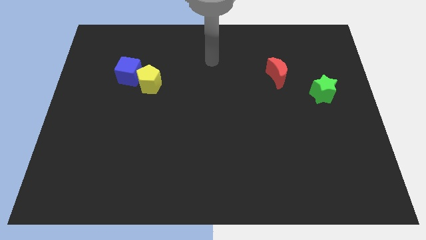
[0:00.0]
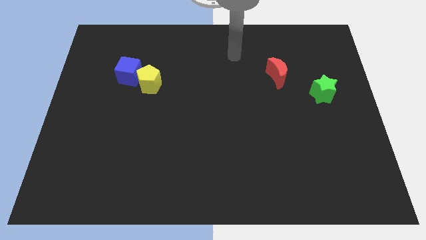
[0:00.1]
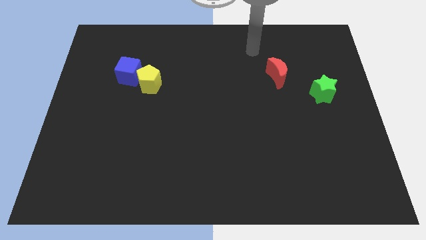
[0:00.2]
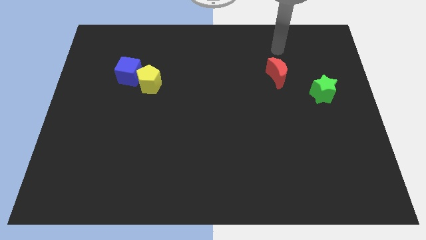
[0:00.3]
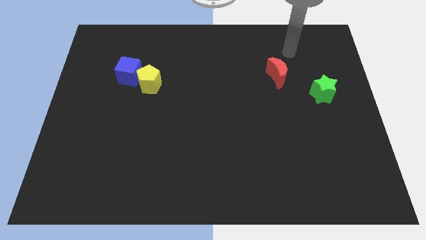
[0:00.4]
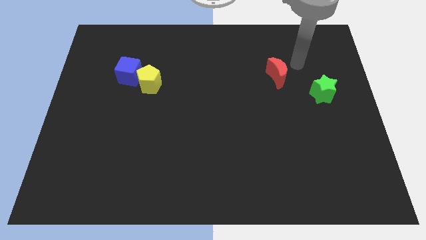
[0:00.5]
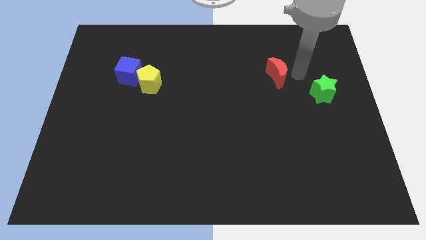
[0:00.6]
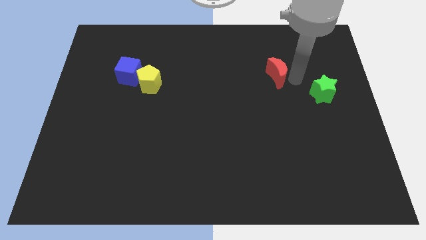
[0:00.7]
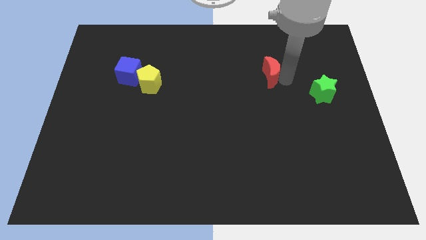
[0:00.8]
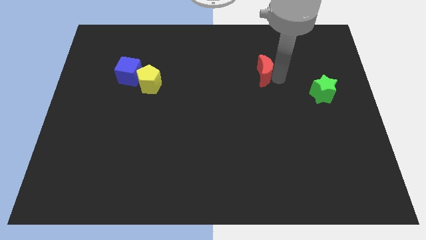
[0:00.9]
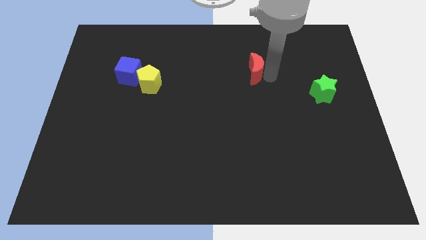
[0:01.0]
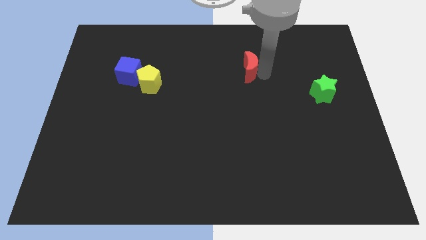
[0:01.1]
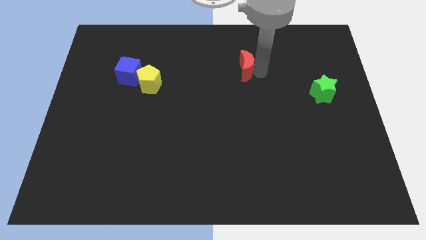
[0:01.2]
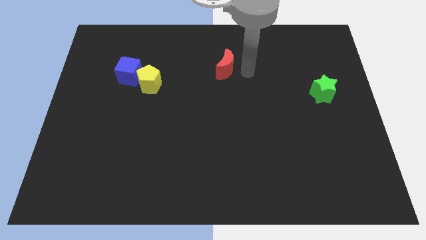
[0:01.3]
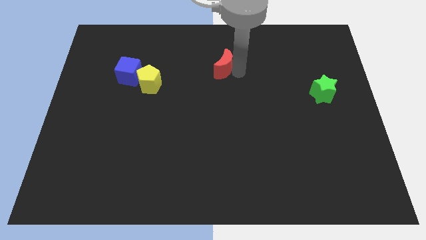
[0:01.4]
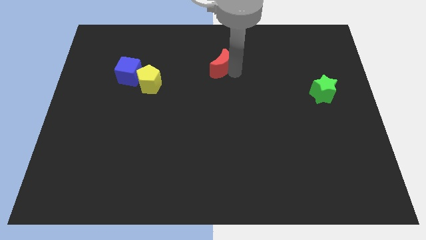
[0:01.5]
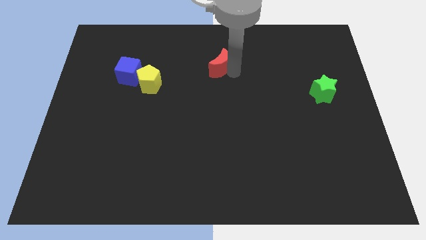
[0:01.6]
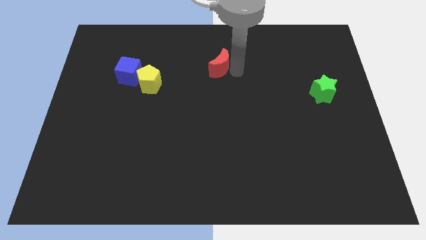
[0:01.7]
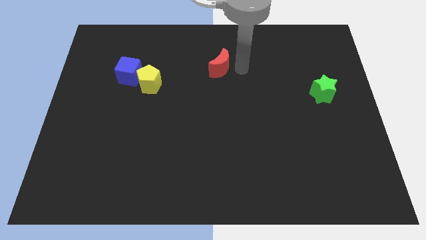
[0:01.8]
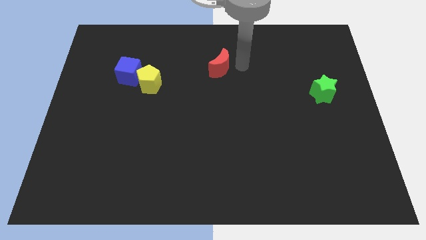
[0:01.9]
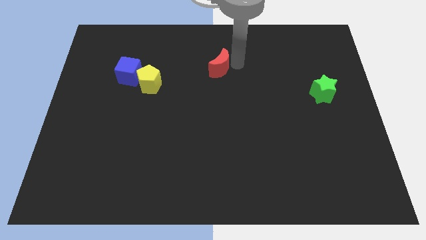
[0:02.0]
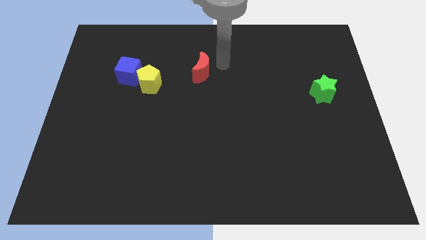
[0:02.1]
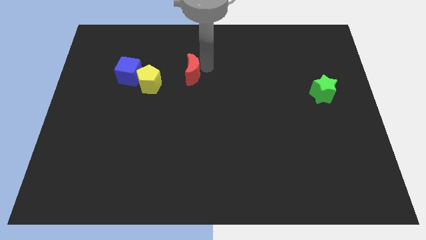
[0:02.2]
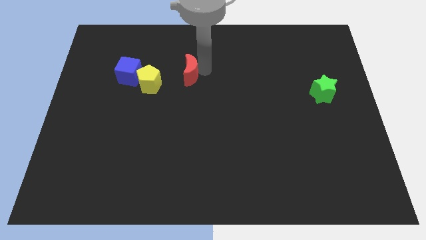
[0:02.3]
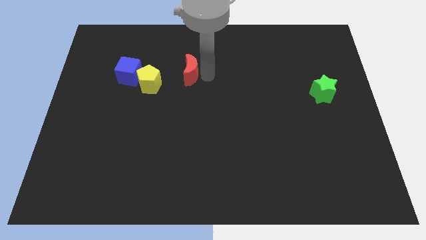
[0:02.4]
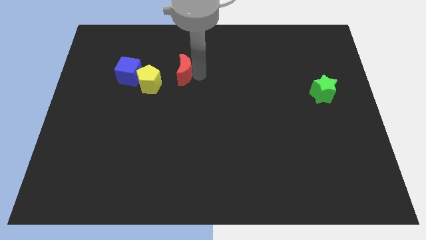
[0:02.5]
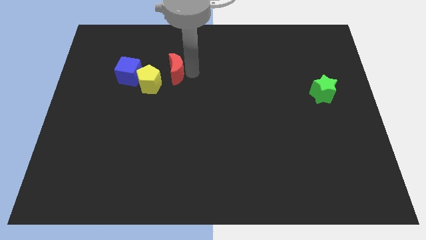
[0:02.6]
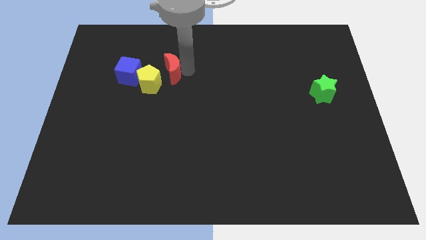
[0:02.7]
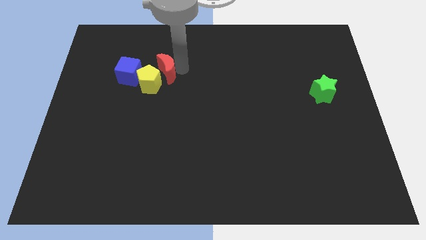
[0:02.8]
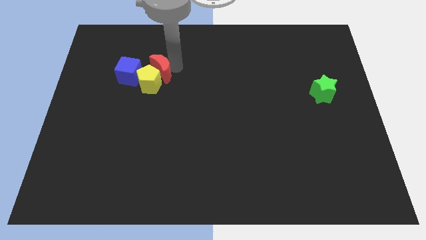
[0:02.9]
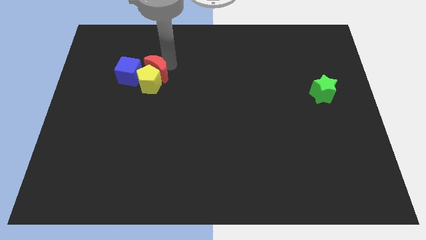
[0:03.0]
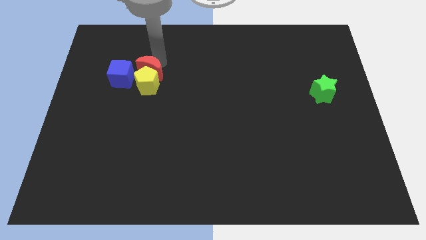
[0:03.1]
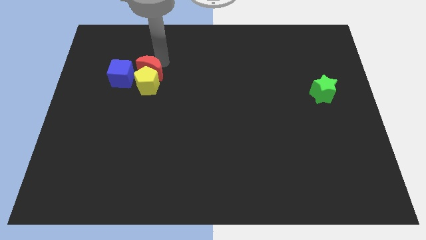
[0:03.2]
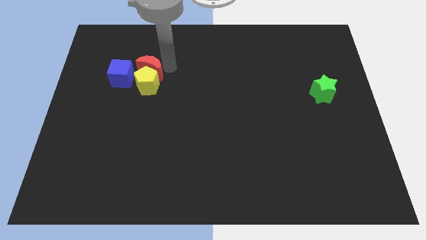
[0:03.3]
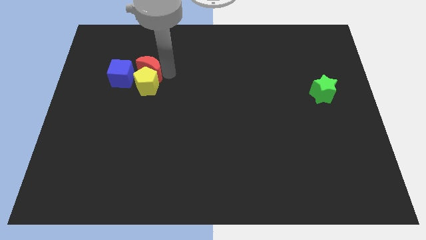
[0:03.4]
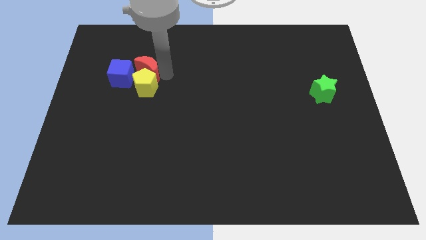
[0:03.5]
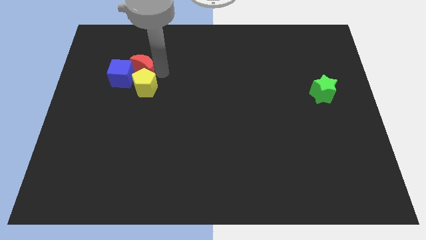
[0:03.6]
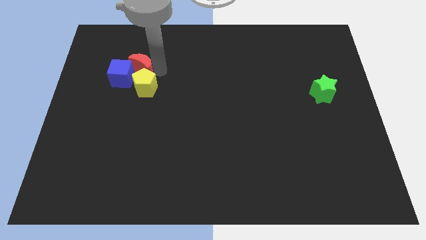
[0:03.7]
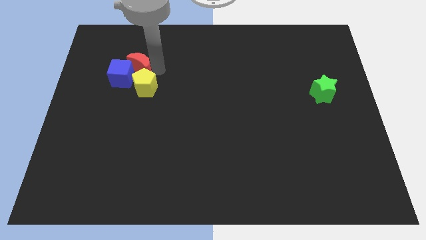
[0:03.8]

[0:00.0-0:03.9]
push the moon to the cube

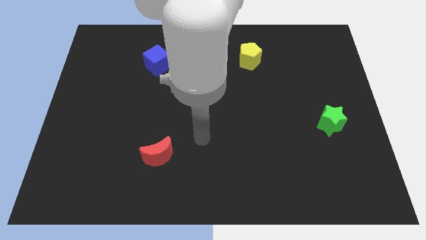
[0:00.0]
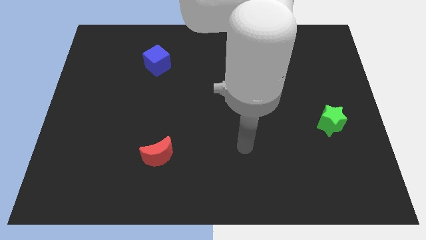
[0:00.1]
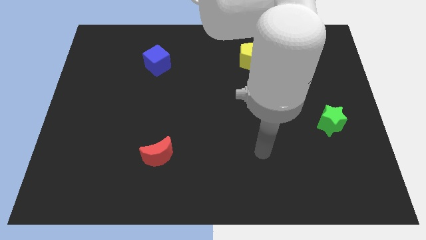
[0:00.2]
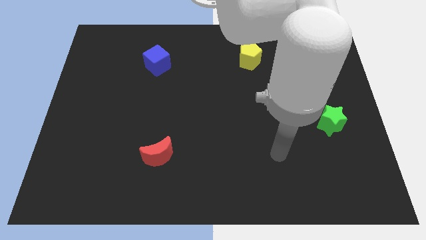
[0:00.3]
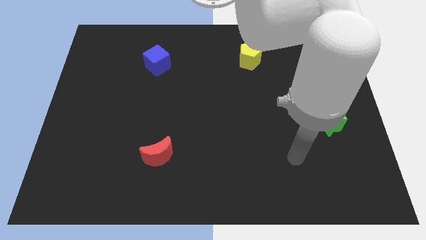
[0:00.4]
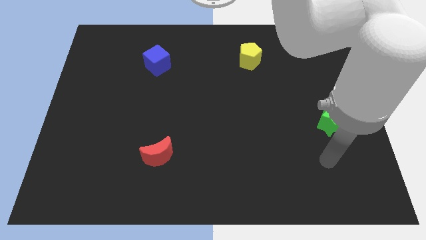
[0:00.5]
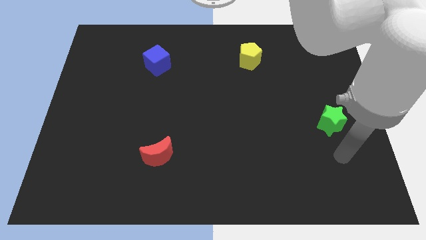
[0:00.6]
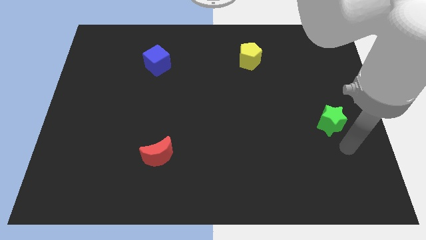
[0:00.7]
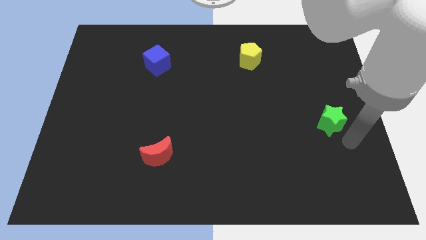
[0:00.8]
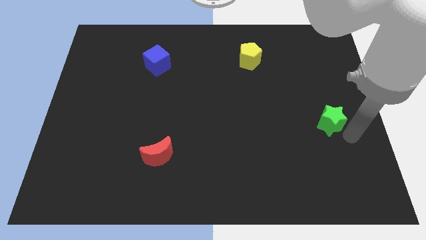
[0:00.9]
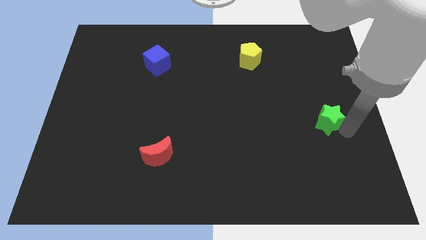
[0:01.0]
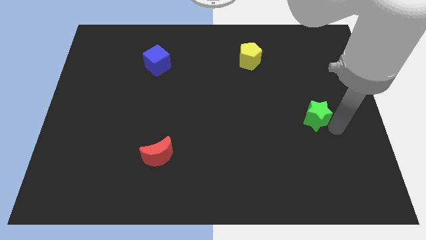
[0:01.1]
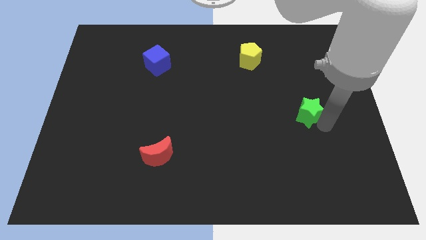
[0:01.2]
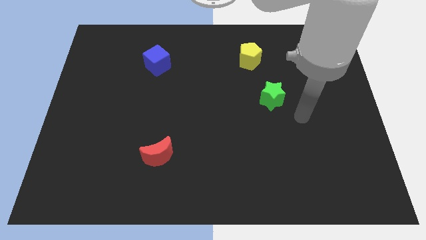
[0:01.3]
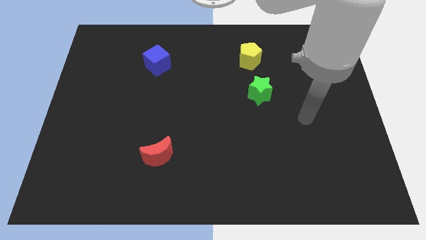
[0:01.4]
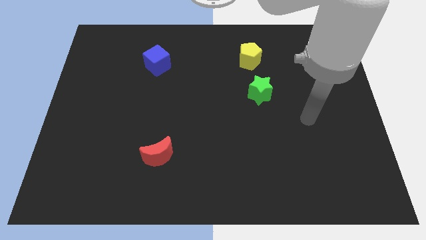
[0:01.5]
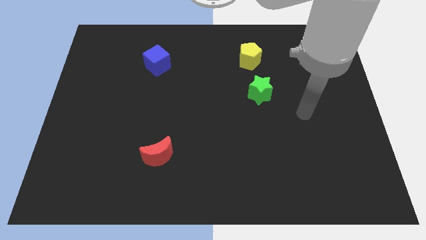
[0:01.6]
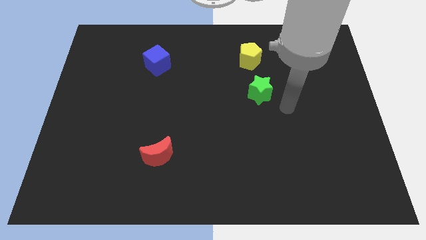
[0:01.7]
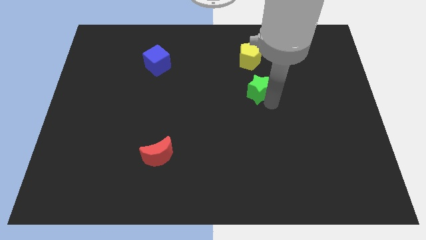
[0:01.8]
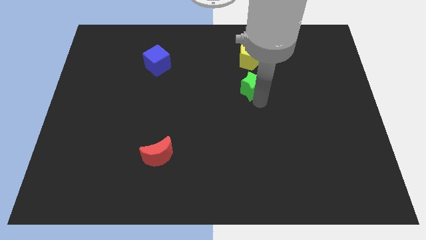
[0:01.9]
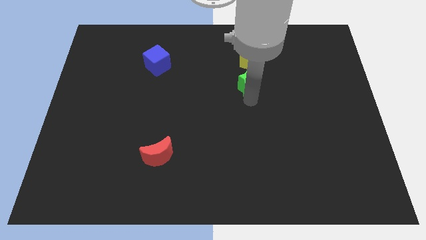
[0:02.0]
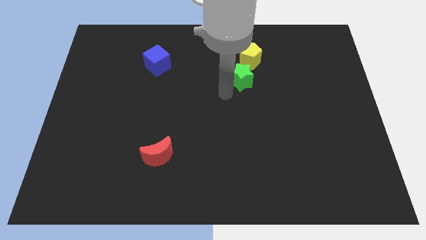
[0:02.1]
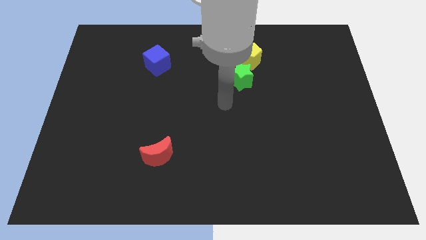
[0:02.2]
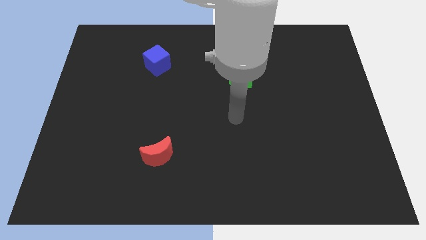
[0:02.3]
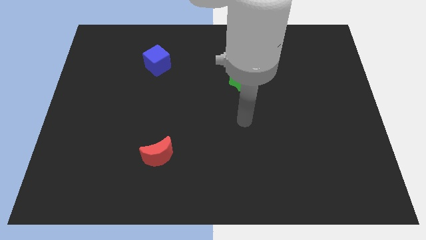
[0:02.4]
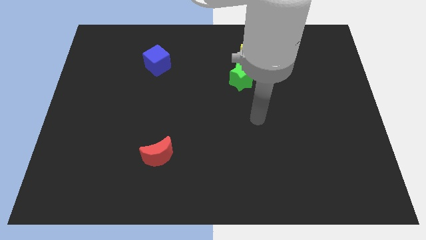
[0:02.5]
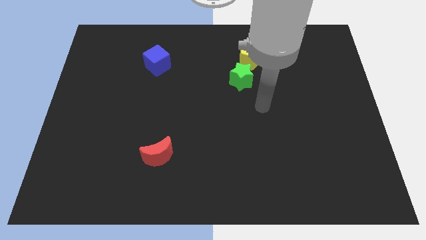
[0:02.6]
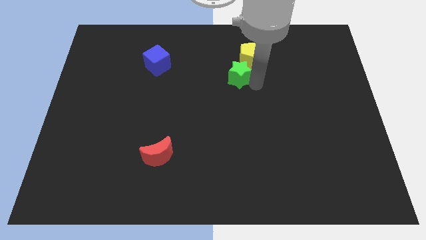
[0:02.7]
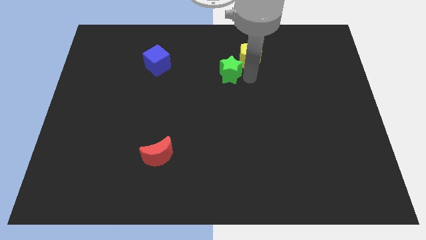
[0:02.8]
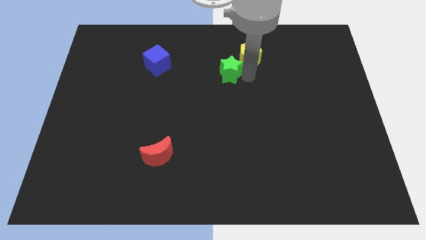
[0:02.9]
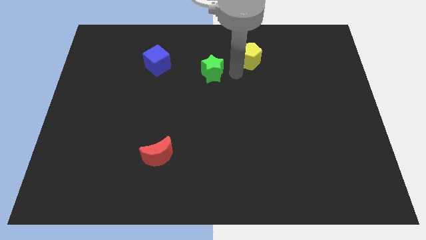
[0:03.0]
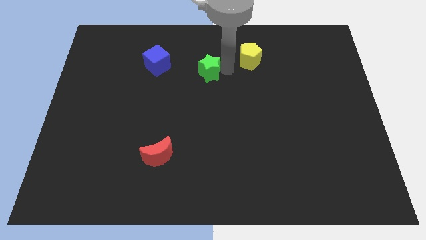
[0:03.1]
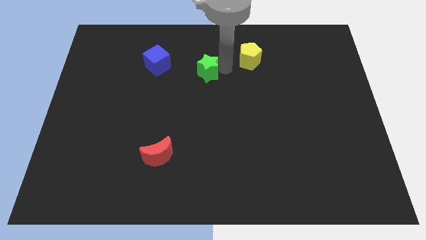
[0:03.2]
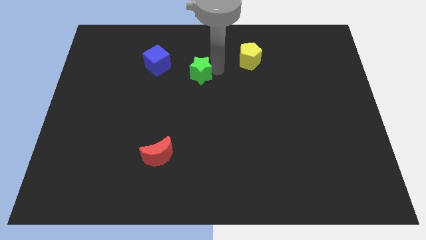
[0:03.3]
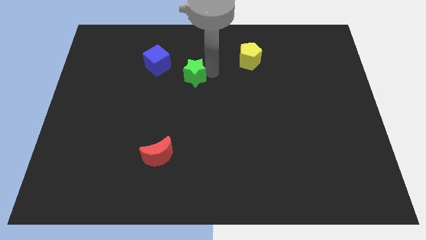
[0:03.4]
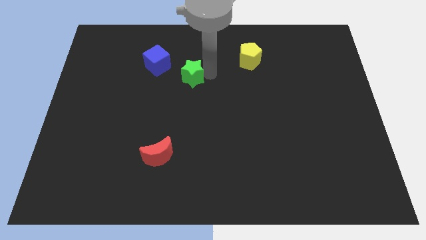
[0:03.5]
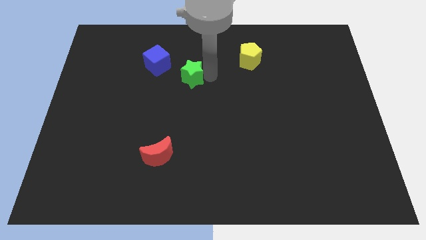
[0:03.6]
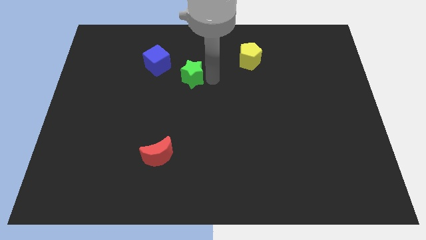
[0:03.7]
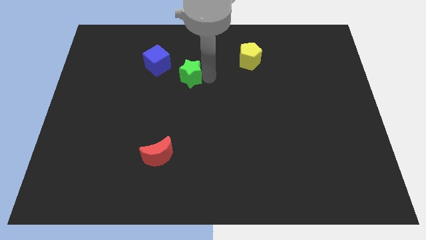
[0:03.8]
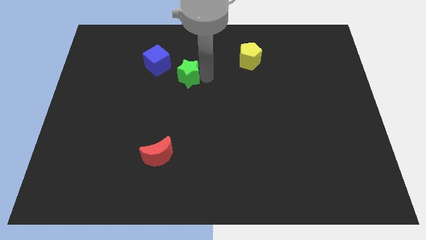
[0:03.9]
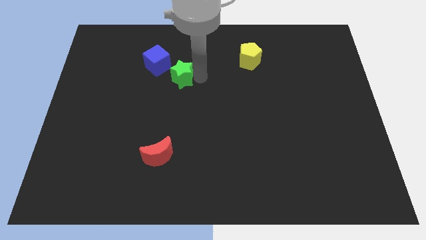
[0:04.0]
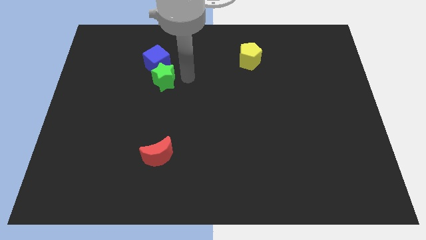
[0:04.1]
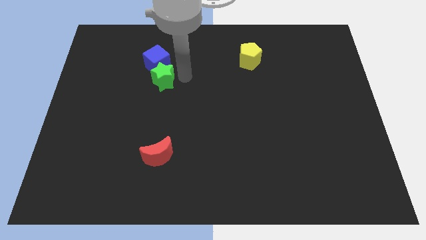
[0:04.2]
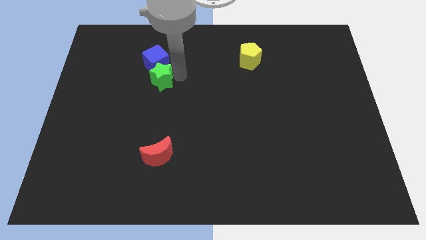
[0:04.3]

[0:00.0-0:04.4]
push the green star next to the blue block

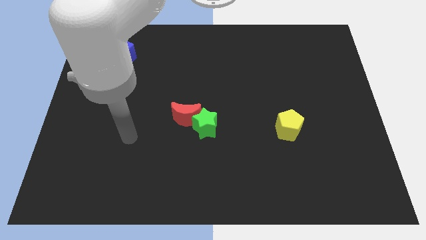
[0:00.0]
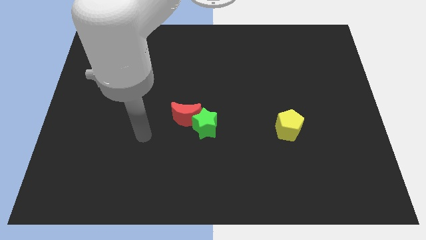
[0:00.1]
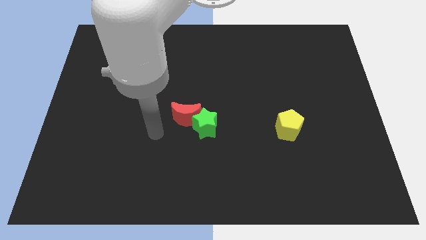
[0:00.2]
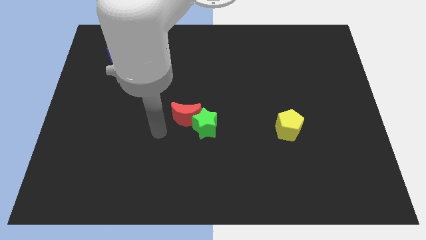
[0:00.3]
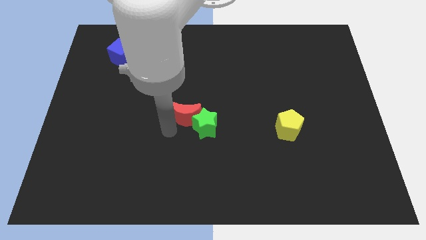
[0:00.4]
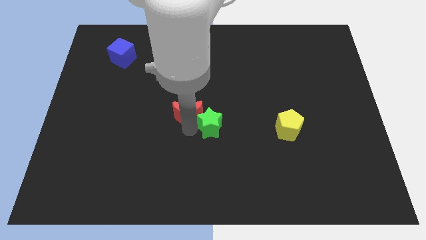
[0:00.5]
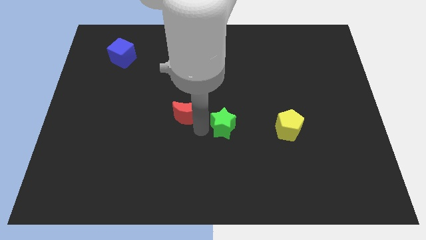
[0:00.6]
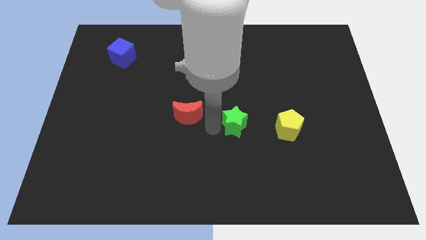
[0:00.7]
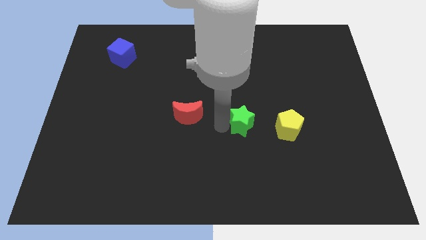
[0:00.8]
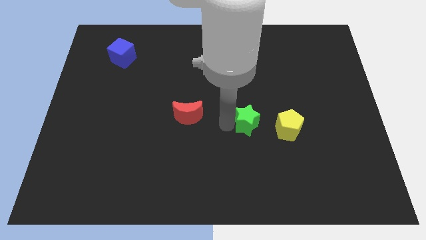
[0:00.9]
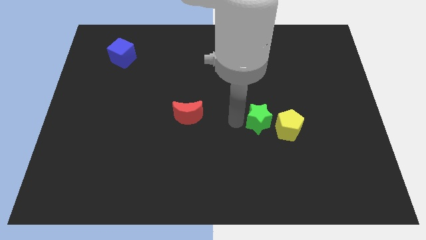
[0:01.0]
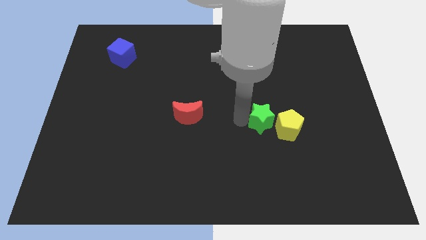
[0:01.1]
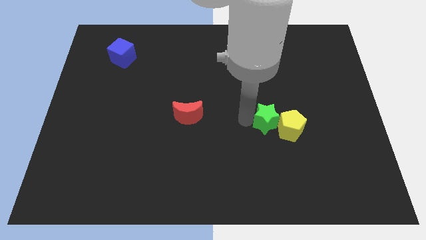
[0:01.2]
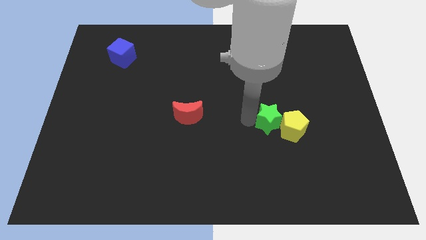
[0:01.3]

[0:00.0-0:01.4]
move the green star towards the pentagon
